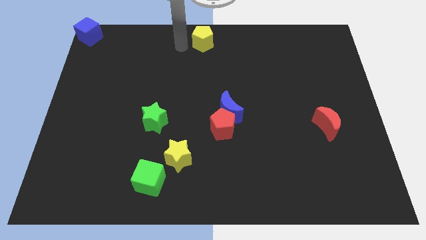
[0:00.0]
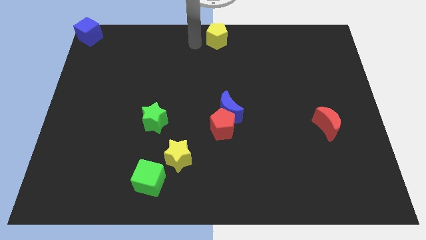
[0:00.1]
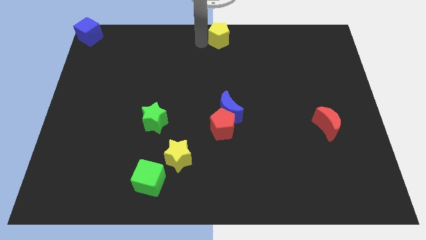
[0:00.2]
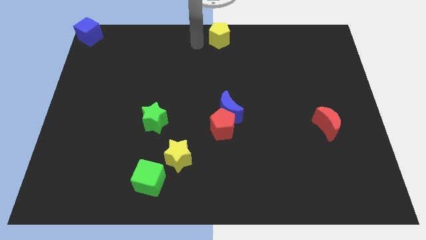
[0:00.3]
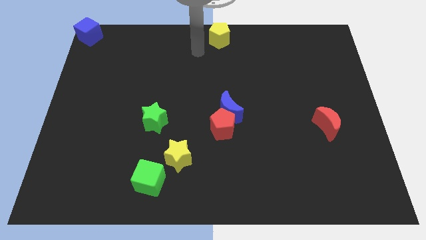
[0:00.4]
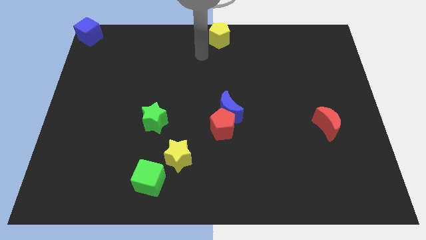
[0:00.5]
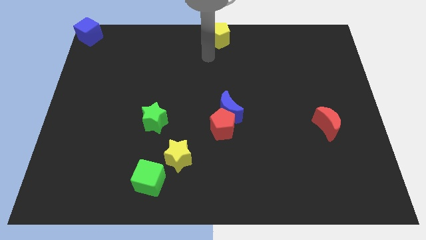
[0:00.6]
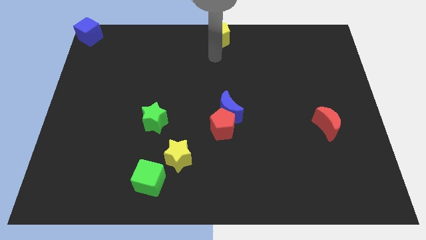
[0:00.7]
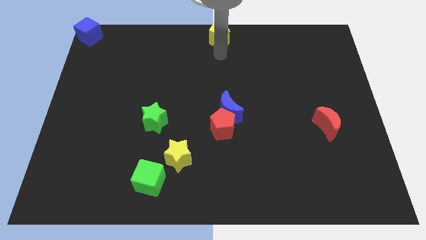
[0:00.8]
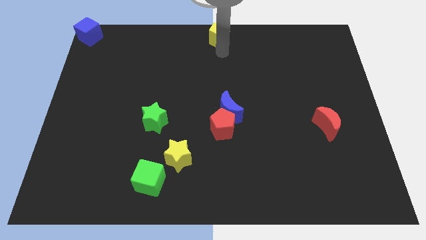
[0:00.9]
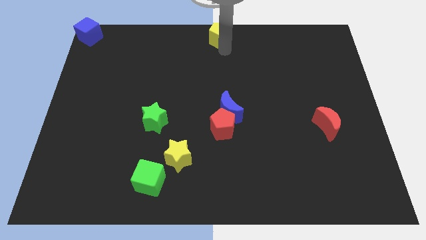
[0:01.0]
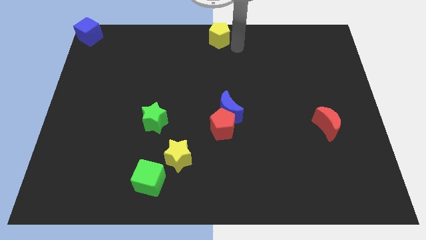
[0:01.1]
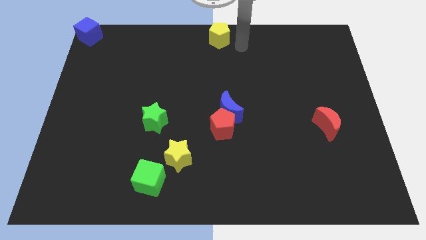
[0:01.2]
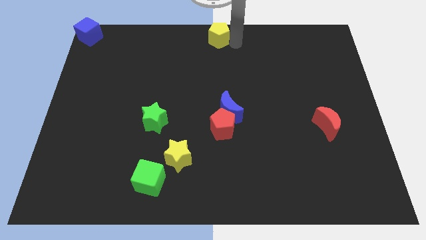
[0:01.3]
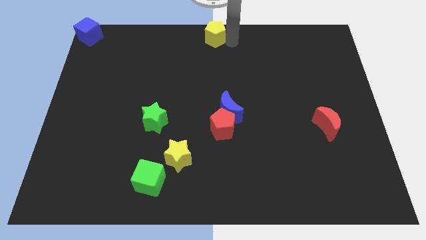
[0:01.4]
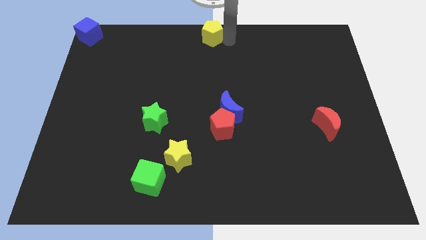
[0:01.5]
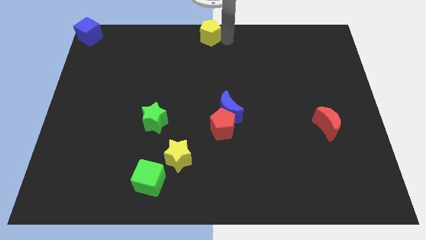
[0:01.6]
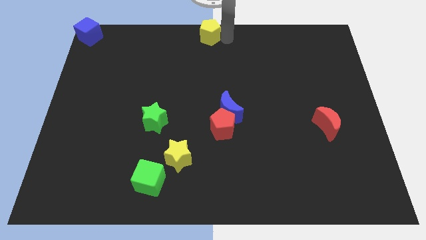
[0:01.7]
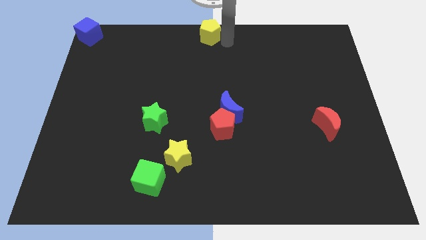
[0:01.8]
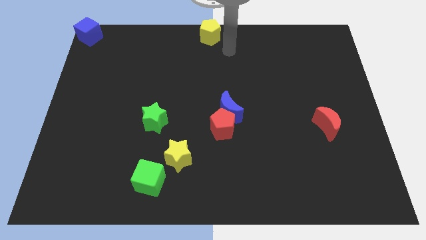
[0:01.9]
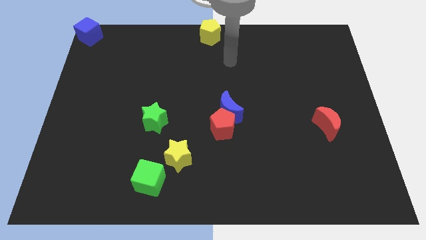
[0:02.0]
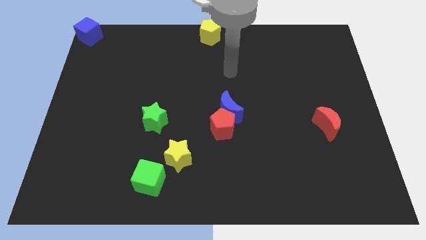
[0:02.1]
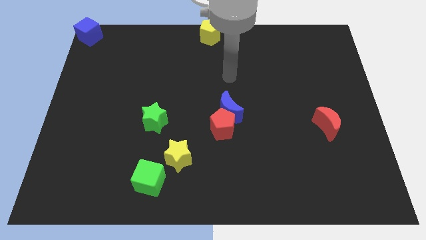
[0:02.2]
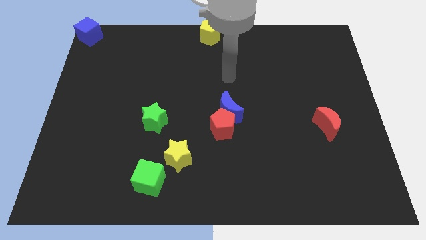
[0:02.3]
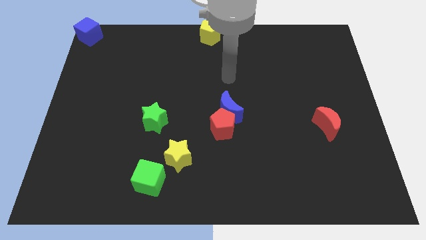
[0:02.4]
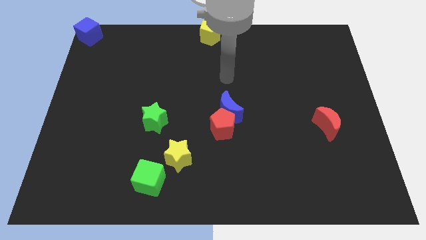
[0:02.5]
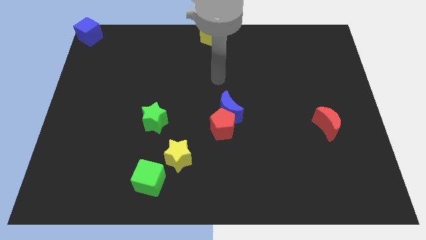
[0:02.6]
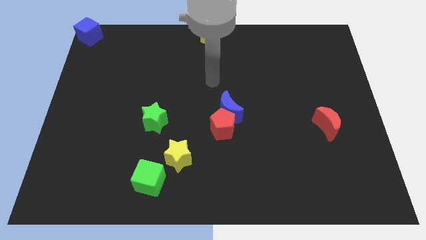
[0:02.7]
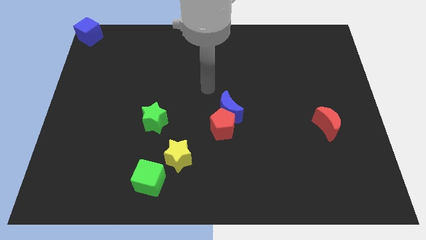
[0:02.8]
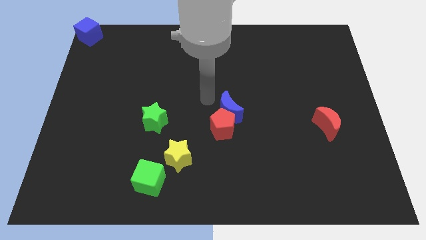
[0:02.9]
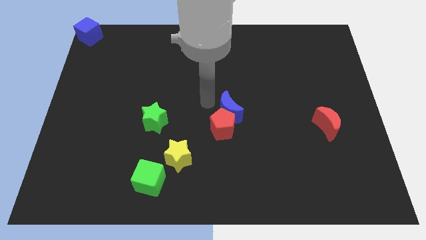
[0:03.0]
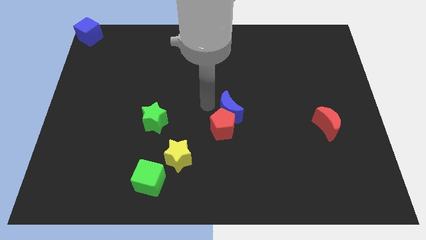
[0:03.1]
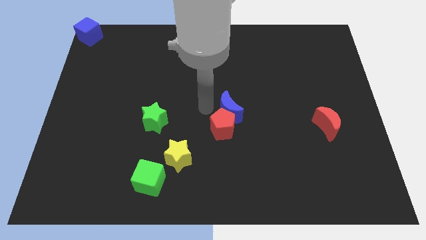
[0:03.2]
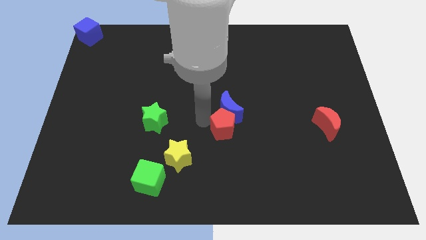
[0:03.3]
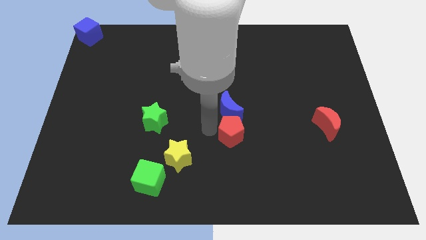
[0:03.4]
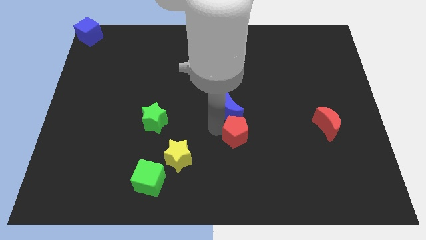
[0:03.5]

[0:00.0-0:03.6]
push the red pentagon towards the bottom of the board slightly

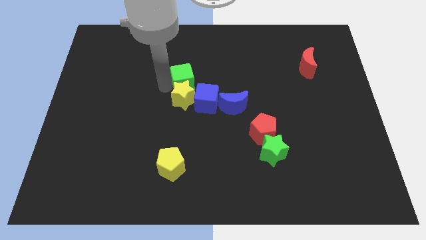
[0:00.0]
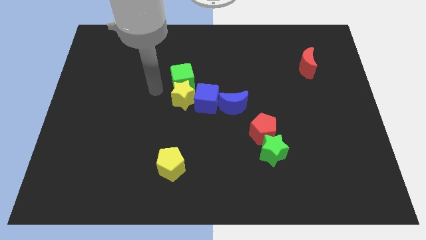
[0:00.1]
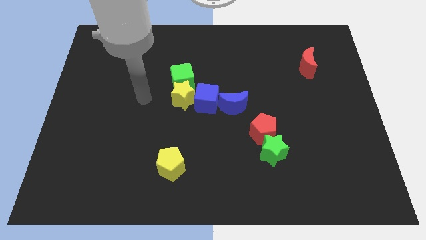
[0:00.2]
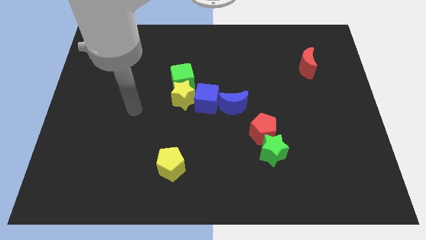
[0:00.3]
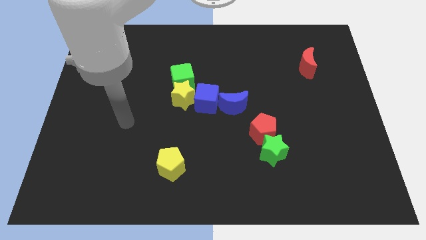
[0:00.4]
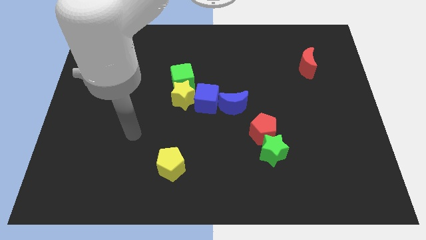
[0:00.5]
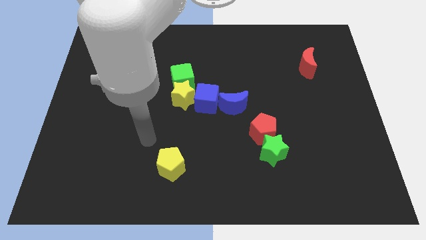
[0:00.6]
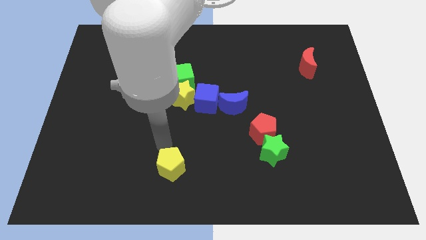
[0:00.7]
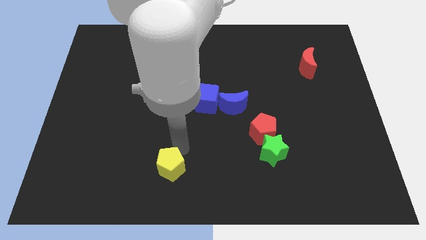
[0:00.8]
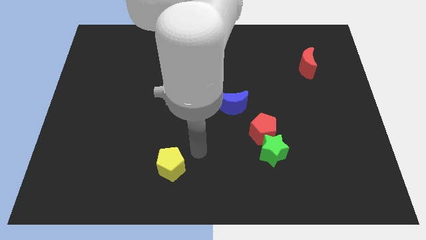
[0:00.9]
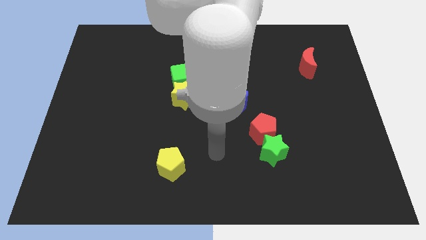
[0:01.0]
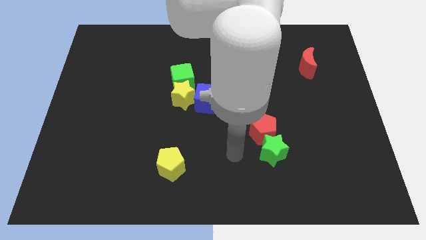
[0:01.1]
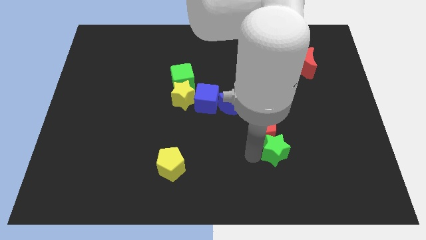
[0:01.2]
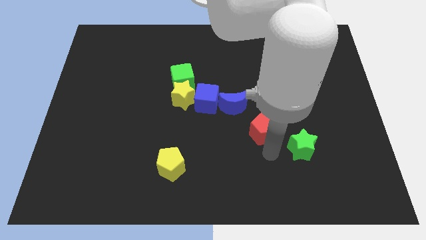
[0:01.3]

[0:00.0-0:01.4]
touch the green star with your arm

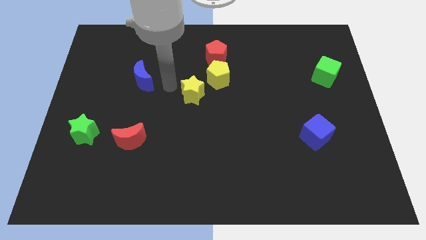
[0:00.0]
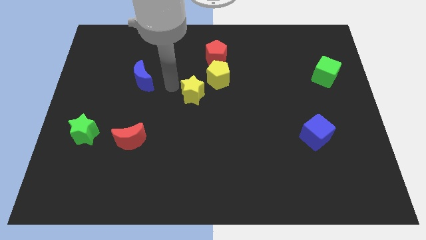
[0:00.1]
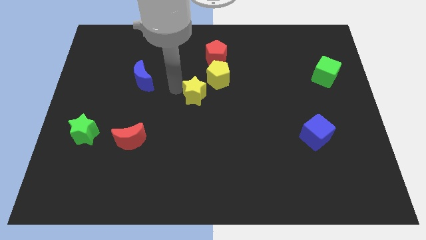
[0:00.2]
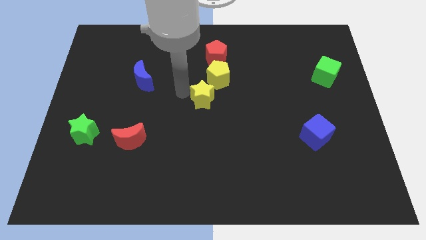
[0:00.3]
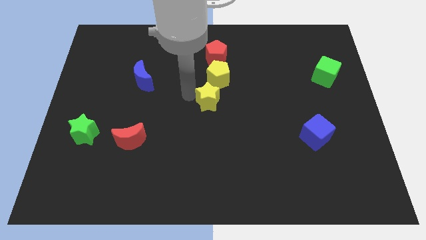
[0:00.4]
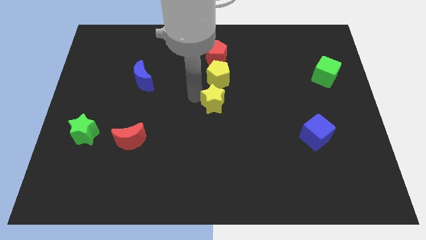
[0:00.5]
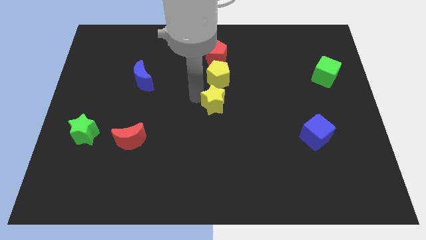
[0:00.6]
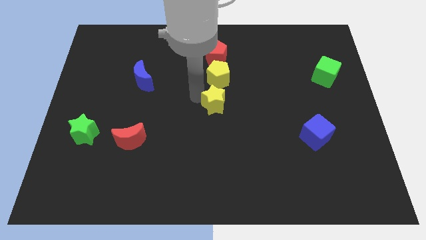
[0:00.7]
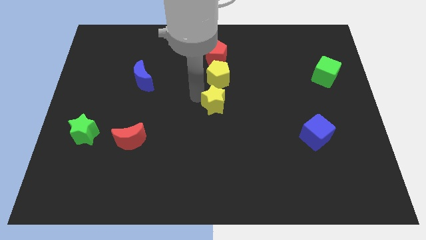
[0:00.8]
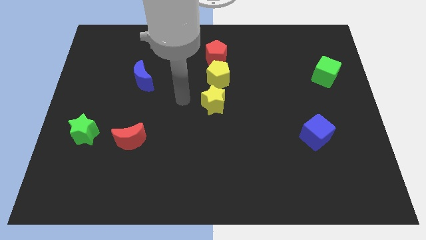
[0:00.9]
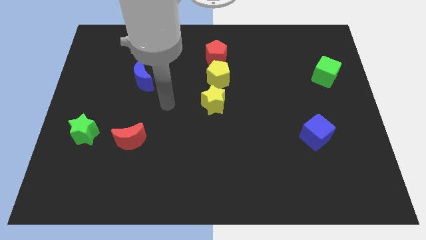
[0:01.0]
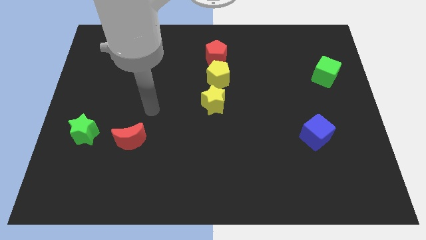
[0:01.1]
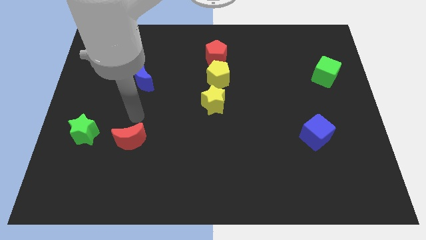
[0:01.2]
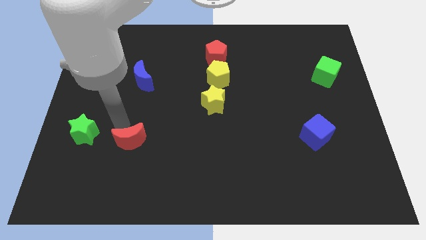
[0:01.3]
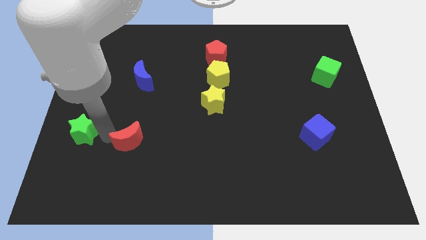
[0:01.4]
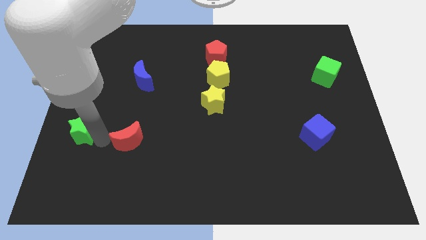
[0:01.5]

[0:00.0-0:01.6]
place yellow star below the yellow pentagon

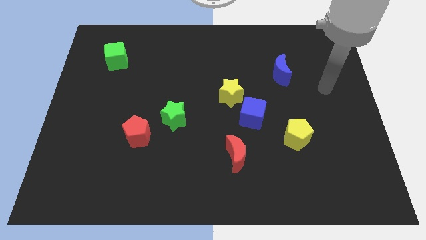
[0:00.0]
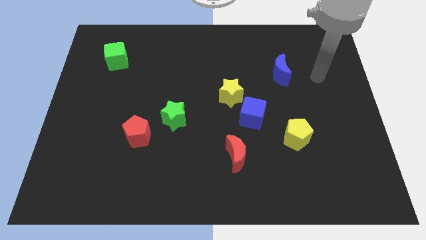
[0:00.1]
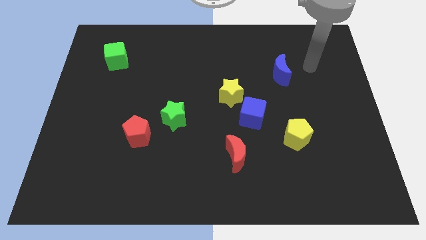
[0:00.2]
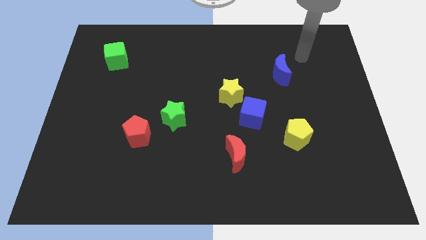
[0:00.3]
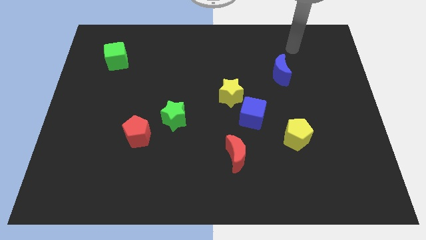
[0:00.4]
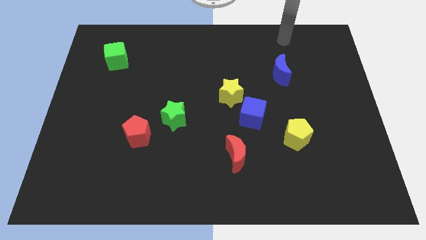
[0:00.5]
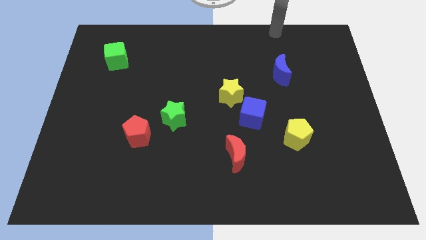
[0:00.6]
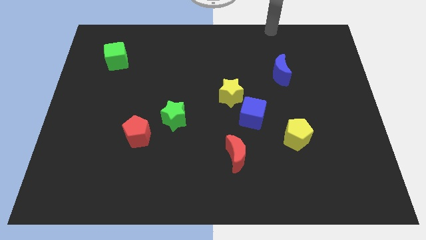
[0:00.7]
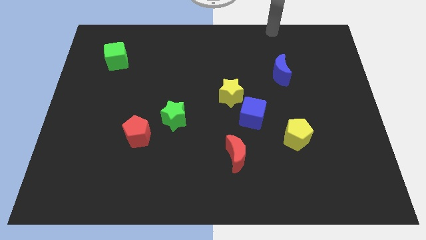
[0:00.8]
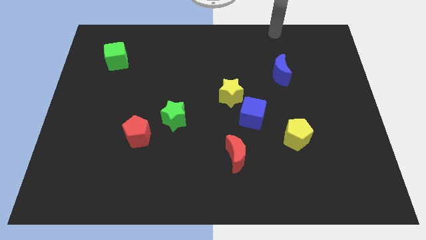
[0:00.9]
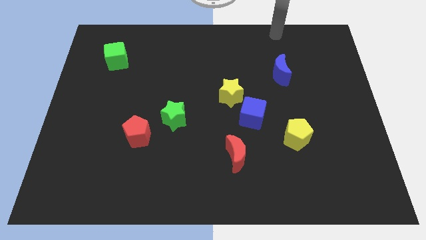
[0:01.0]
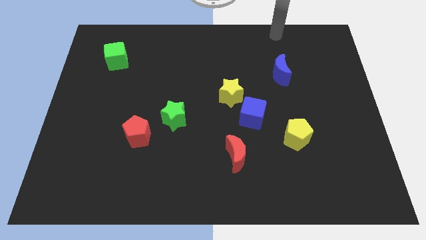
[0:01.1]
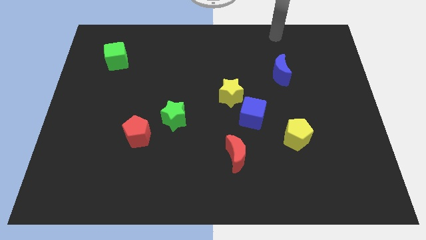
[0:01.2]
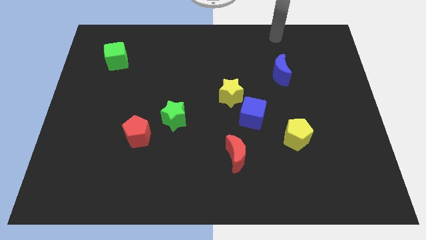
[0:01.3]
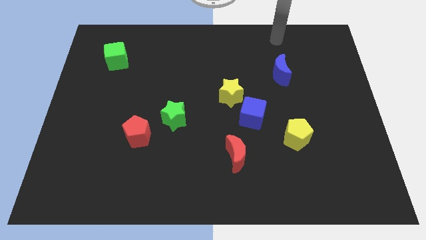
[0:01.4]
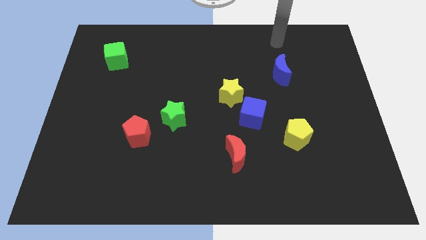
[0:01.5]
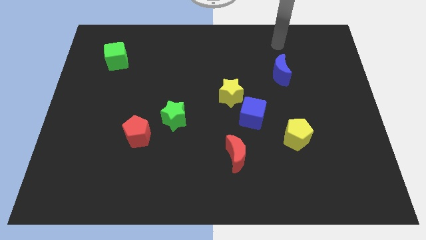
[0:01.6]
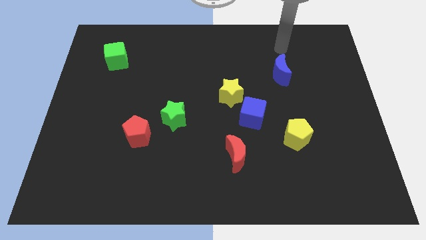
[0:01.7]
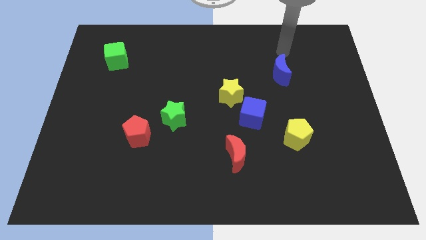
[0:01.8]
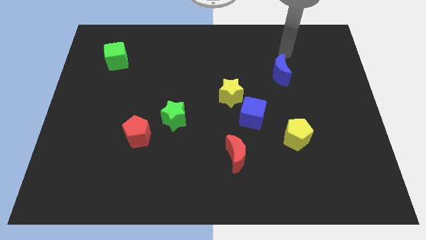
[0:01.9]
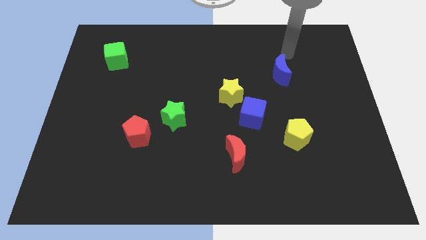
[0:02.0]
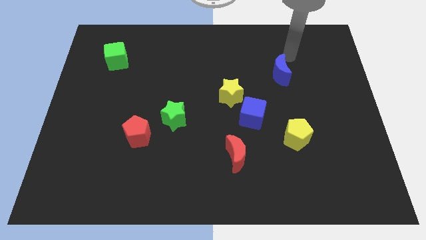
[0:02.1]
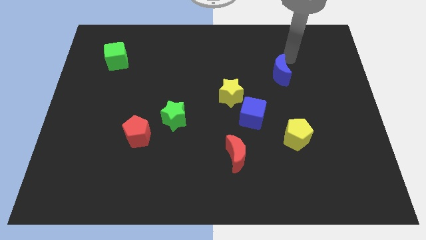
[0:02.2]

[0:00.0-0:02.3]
move the arm to the right of the blue crescent

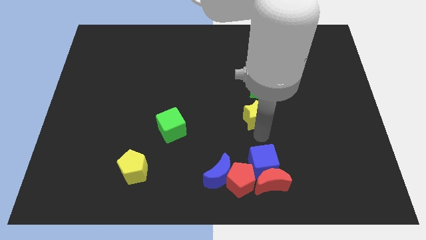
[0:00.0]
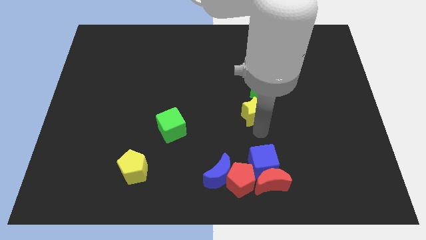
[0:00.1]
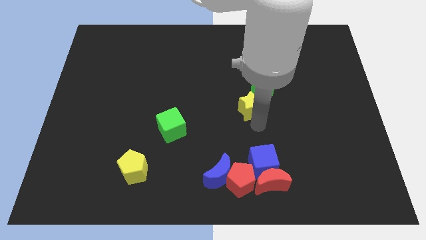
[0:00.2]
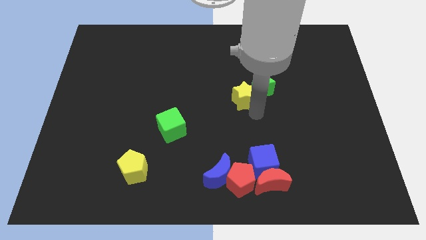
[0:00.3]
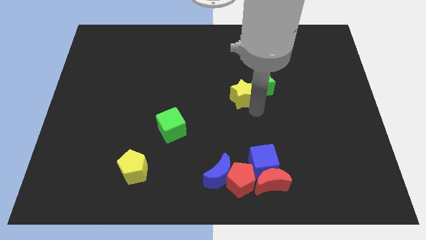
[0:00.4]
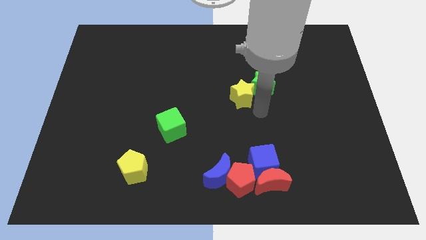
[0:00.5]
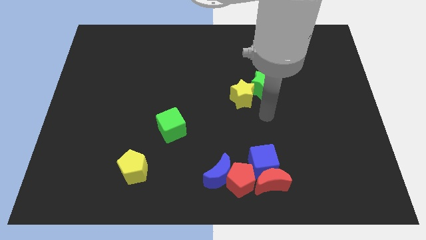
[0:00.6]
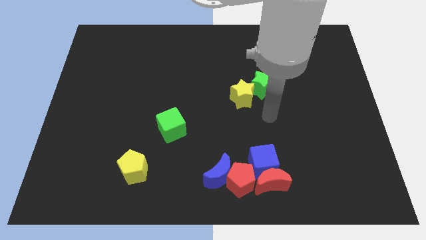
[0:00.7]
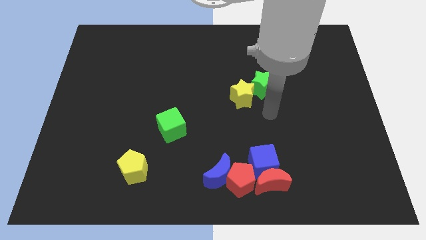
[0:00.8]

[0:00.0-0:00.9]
move yellow star into green star
